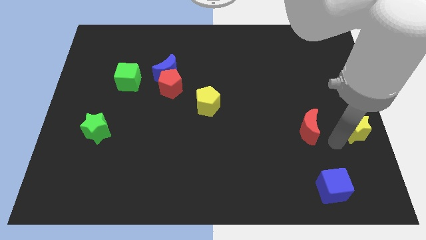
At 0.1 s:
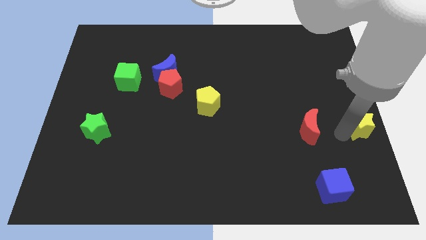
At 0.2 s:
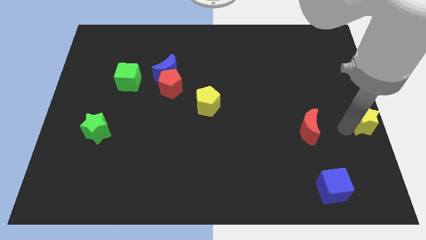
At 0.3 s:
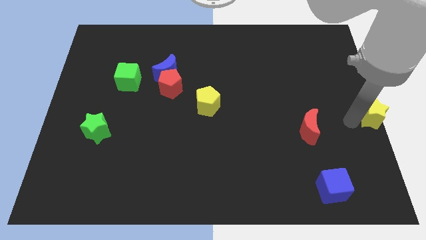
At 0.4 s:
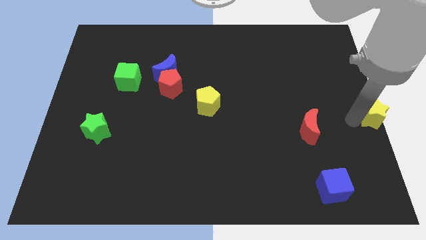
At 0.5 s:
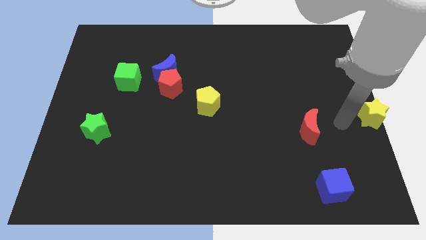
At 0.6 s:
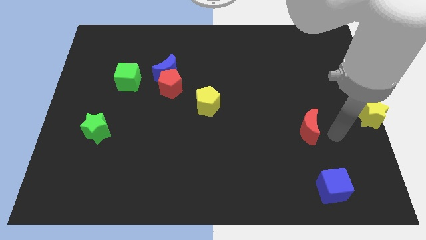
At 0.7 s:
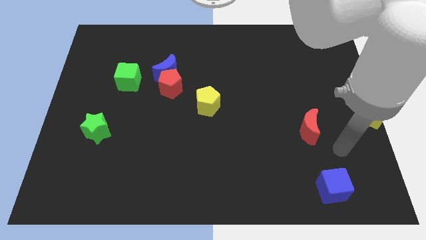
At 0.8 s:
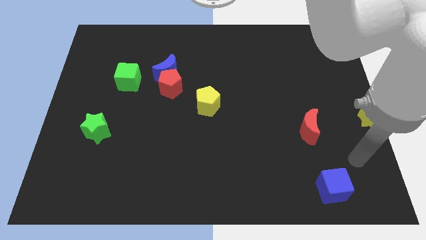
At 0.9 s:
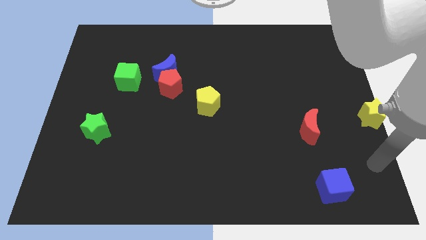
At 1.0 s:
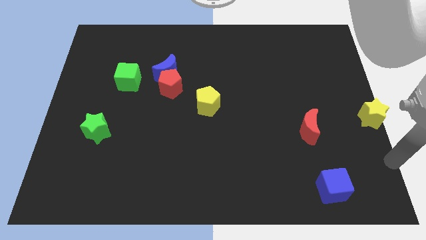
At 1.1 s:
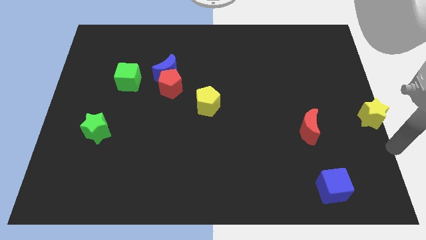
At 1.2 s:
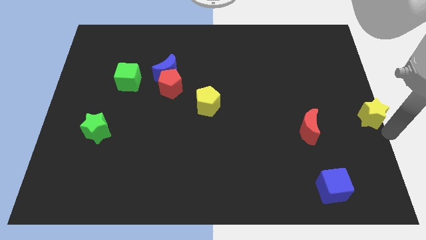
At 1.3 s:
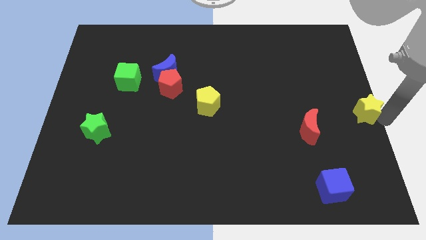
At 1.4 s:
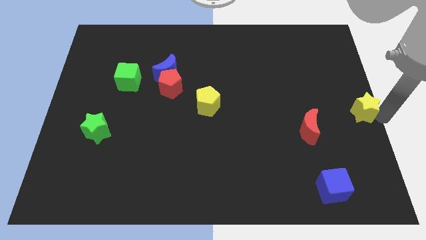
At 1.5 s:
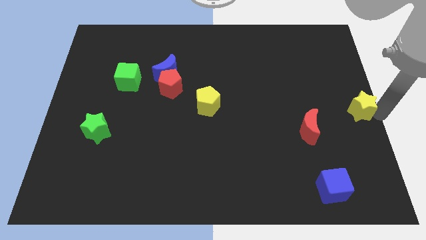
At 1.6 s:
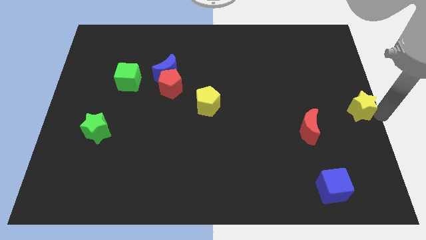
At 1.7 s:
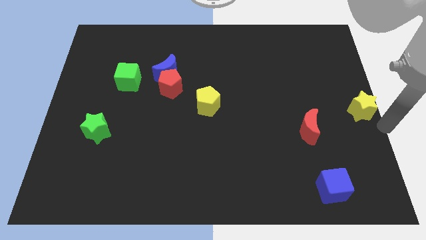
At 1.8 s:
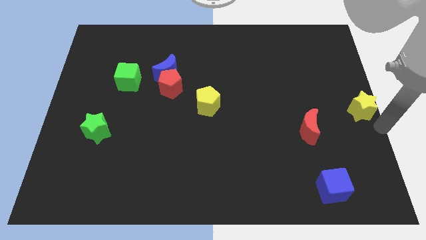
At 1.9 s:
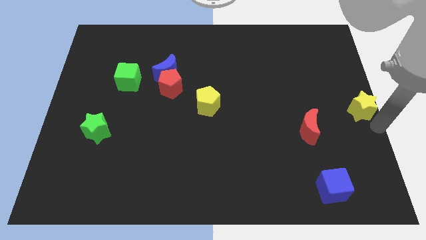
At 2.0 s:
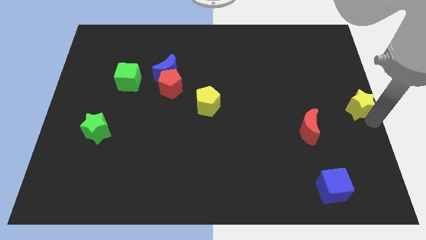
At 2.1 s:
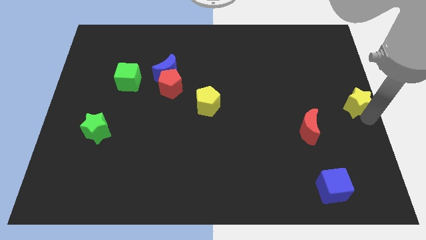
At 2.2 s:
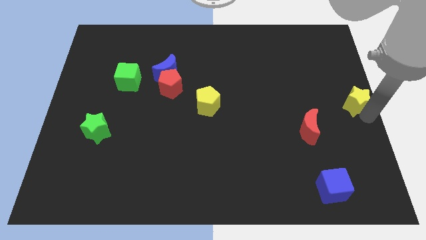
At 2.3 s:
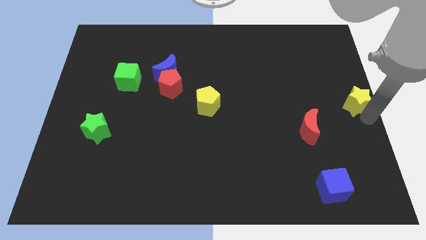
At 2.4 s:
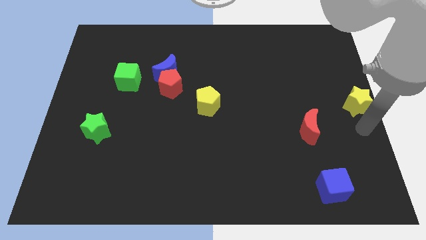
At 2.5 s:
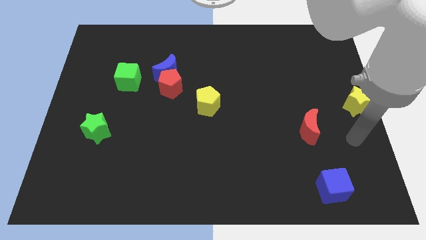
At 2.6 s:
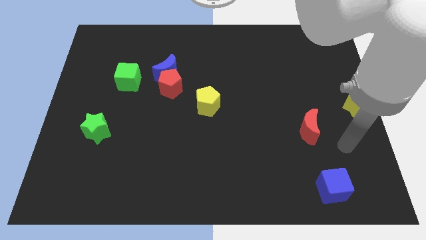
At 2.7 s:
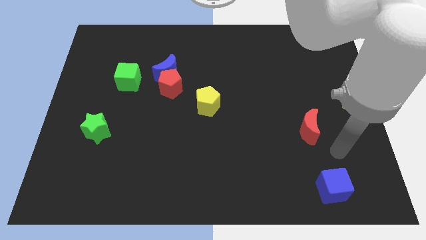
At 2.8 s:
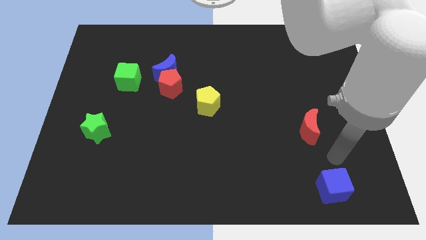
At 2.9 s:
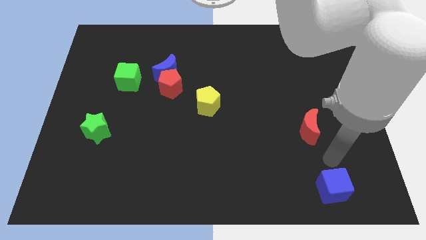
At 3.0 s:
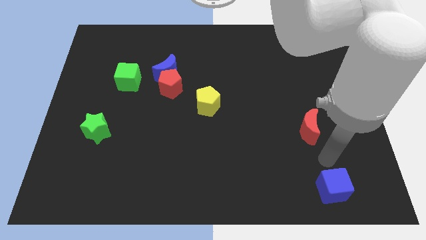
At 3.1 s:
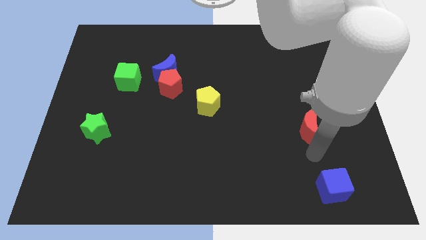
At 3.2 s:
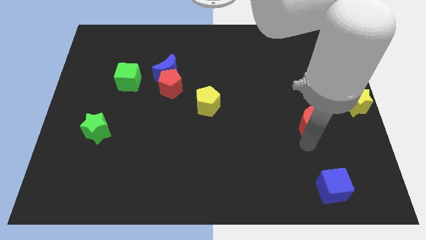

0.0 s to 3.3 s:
push the yellow star to the center right of the board

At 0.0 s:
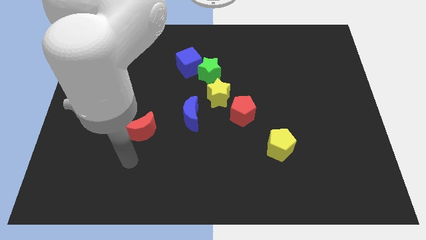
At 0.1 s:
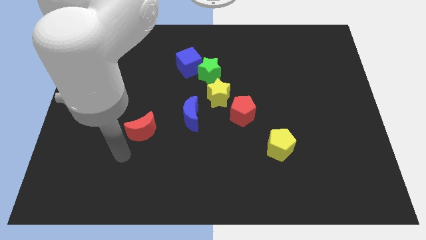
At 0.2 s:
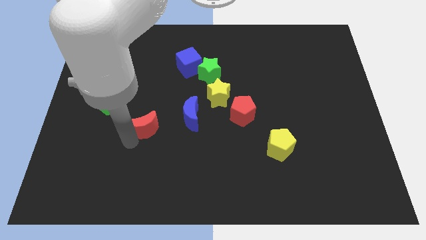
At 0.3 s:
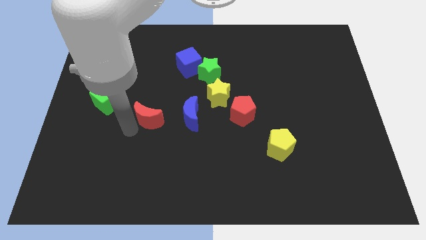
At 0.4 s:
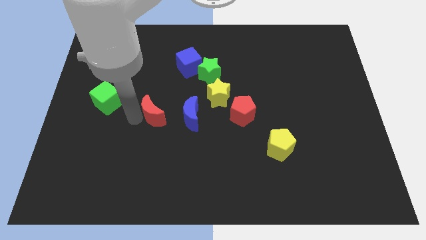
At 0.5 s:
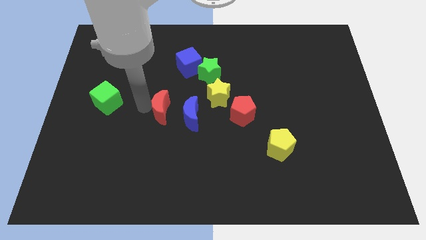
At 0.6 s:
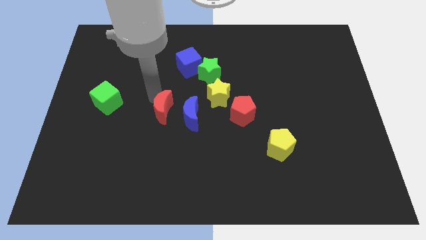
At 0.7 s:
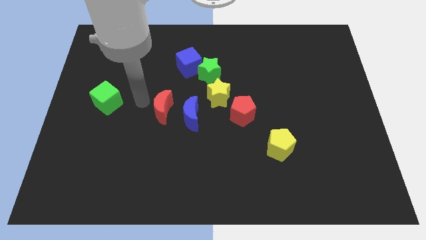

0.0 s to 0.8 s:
move the red crescent to the right of the green cube

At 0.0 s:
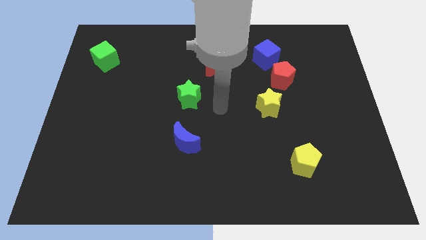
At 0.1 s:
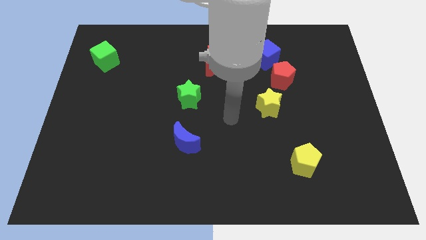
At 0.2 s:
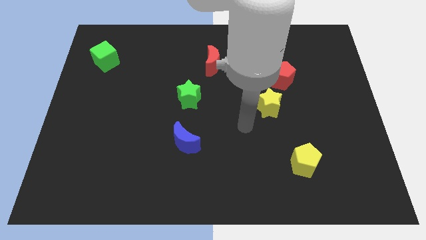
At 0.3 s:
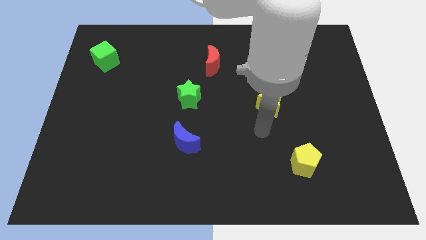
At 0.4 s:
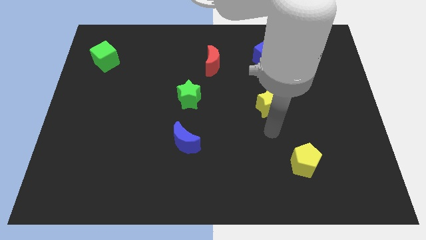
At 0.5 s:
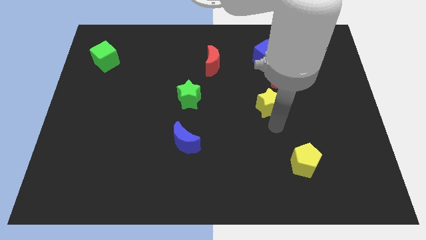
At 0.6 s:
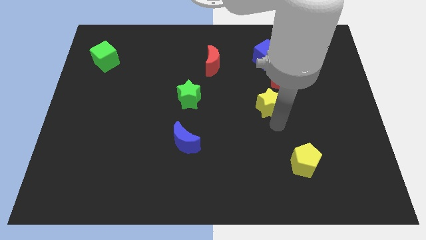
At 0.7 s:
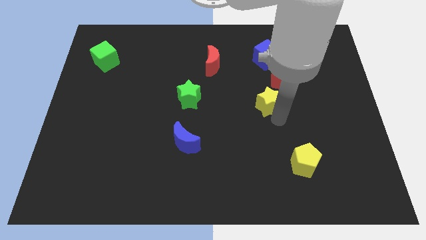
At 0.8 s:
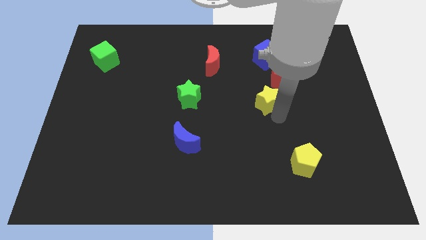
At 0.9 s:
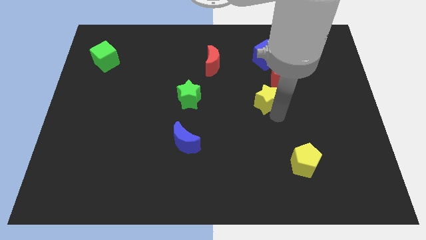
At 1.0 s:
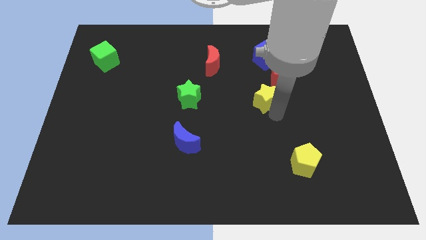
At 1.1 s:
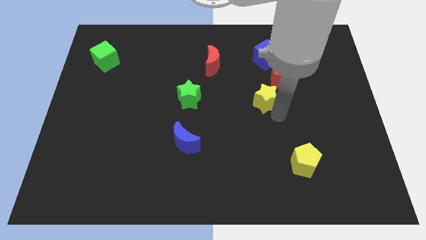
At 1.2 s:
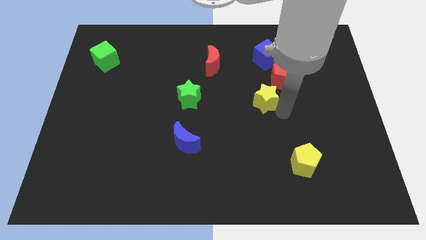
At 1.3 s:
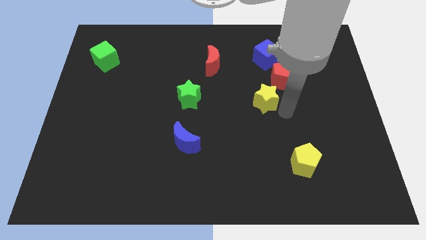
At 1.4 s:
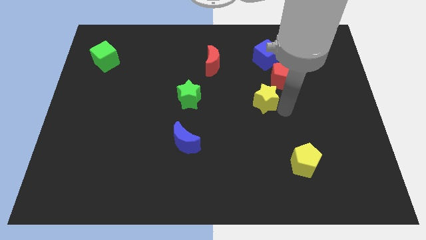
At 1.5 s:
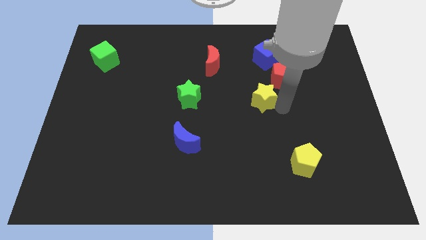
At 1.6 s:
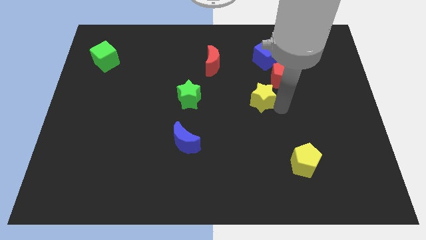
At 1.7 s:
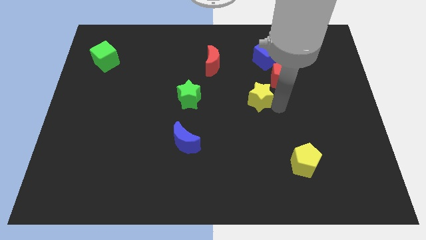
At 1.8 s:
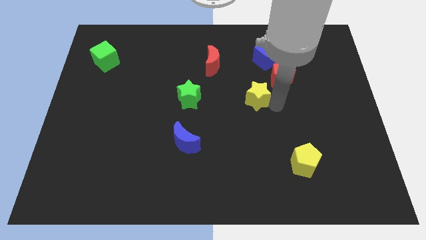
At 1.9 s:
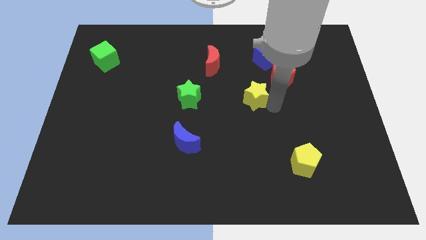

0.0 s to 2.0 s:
move the yellow star slightly to the left

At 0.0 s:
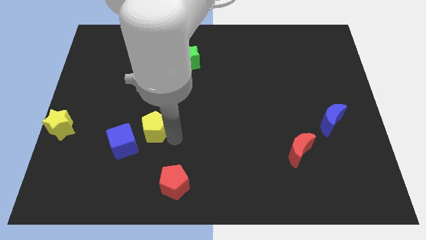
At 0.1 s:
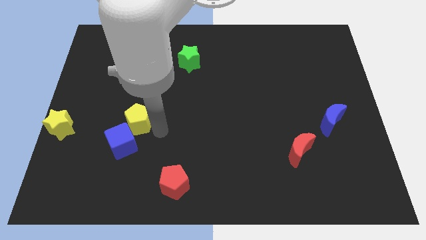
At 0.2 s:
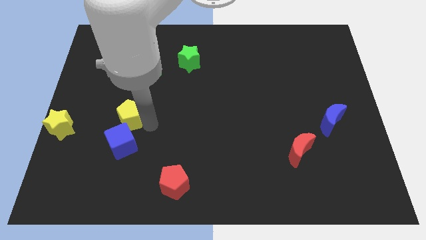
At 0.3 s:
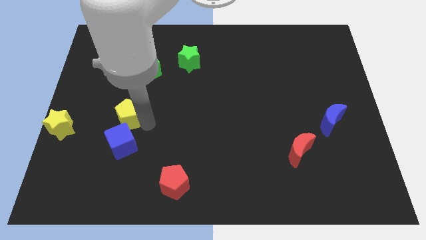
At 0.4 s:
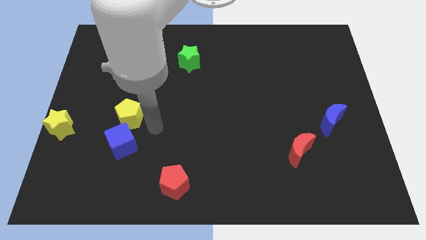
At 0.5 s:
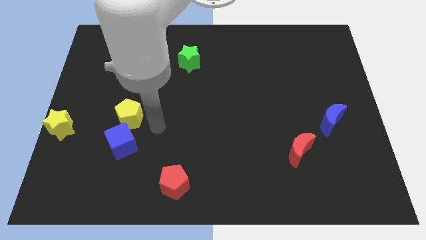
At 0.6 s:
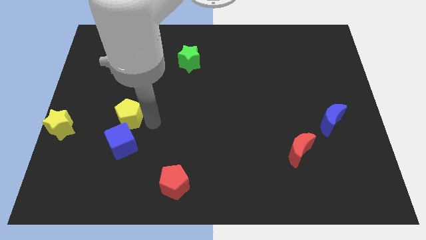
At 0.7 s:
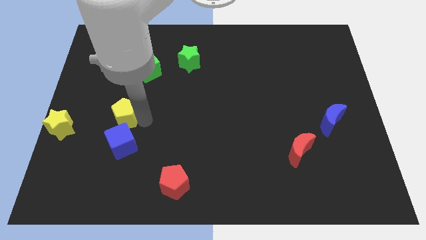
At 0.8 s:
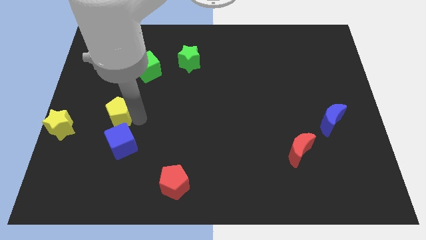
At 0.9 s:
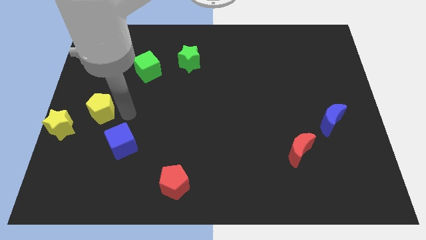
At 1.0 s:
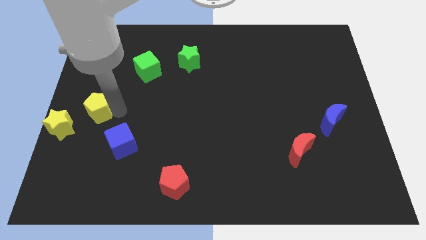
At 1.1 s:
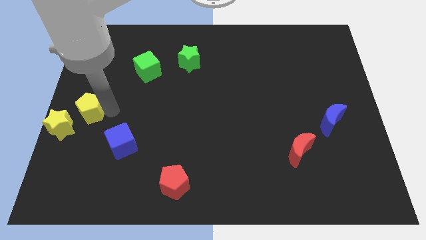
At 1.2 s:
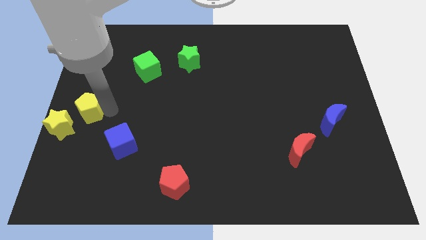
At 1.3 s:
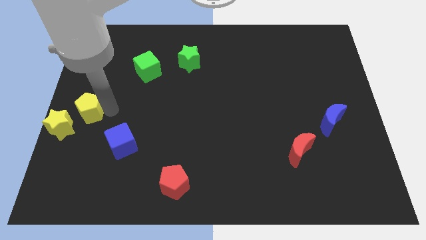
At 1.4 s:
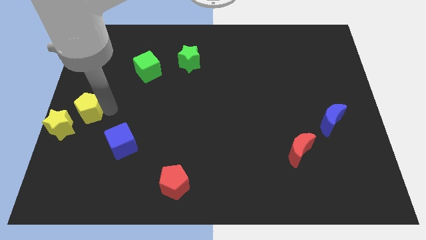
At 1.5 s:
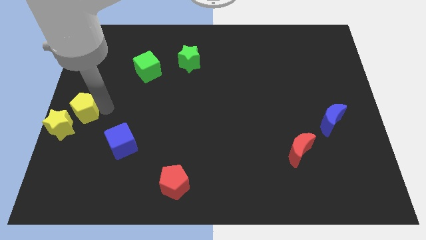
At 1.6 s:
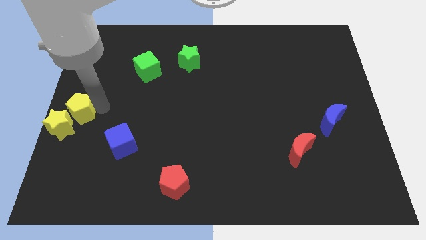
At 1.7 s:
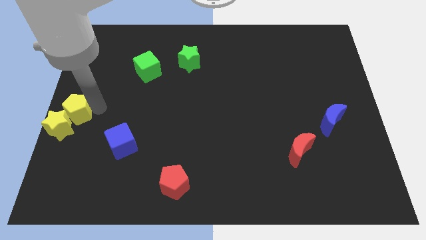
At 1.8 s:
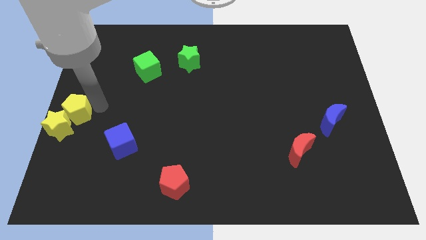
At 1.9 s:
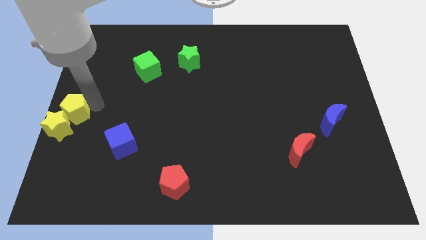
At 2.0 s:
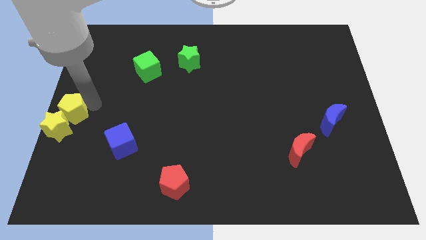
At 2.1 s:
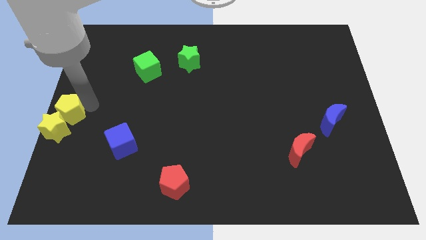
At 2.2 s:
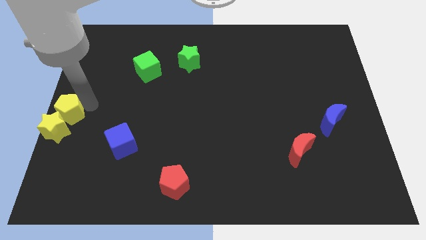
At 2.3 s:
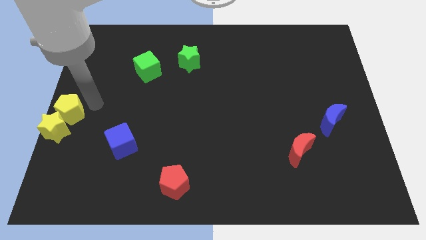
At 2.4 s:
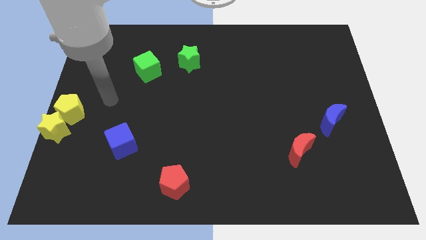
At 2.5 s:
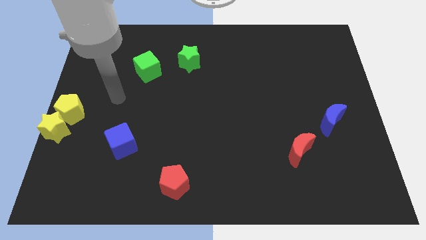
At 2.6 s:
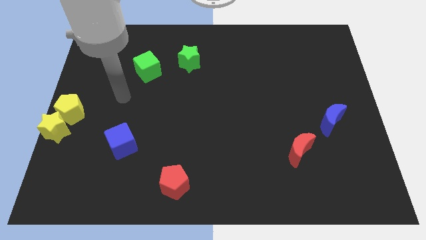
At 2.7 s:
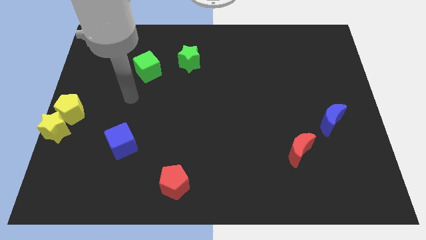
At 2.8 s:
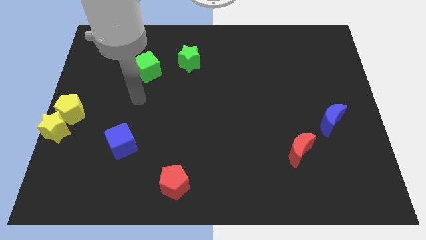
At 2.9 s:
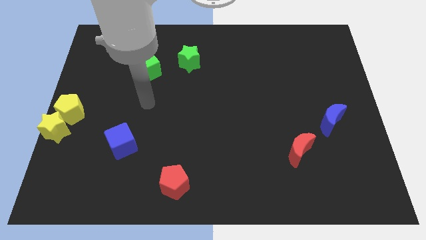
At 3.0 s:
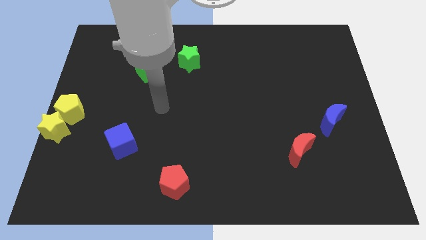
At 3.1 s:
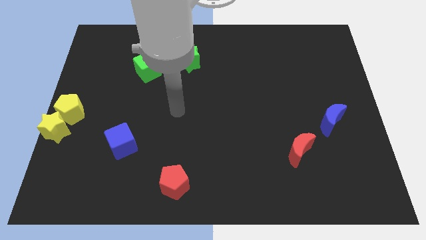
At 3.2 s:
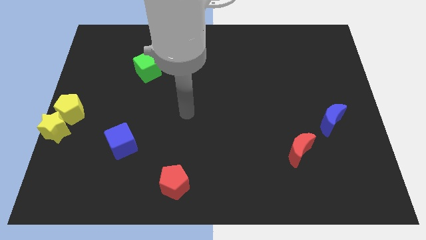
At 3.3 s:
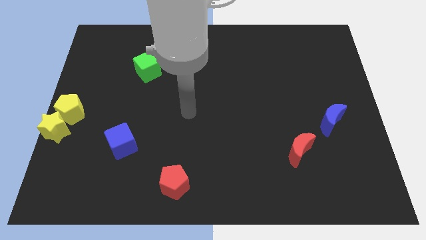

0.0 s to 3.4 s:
push the yellow pentagon into the yellow star
